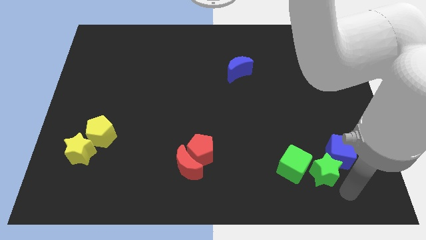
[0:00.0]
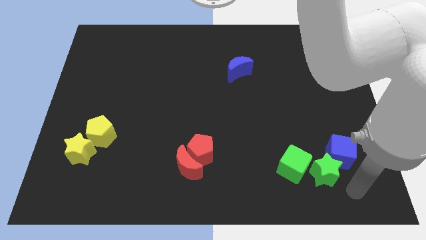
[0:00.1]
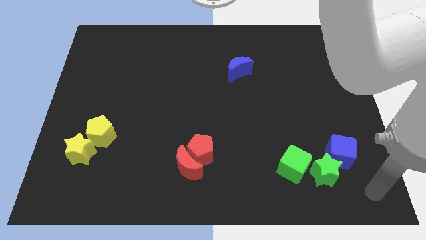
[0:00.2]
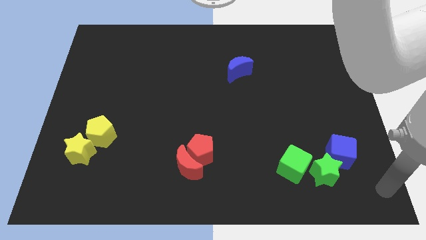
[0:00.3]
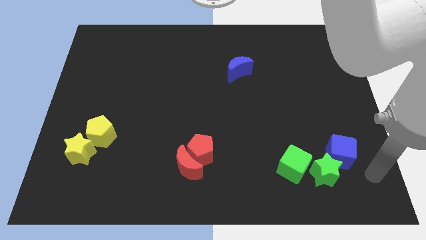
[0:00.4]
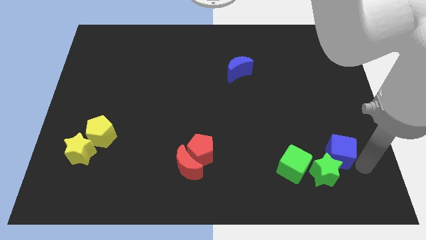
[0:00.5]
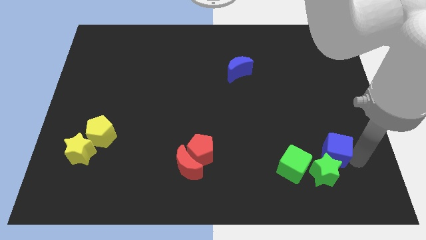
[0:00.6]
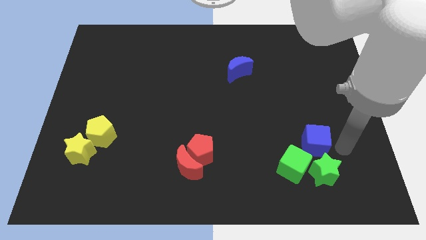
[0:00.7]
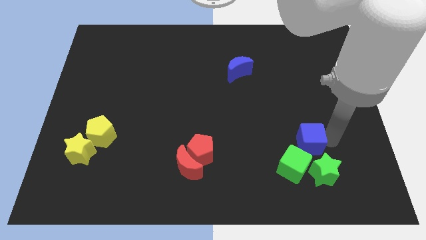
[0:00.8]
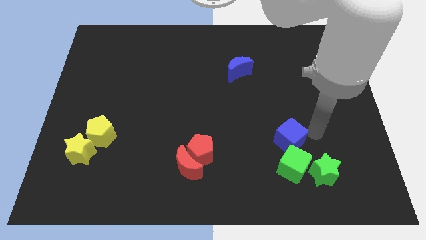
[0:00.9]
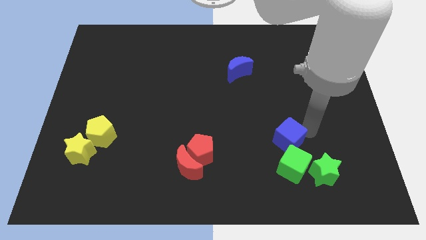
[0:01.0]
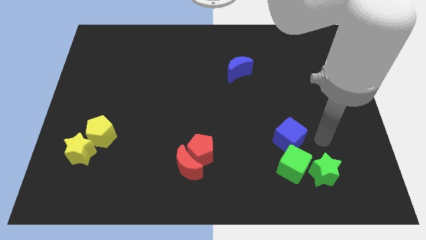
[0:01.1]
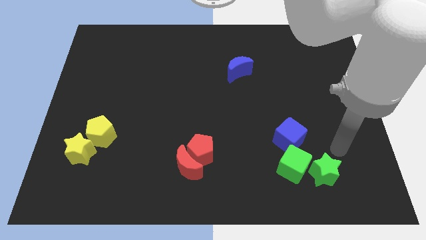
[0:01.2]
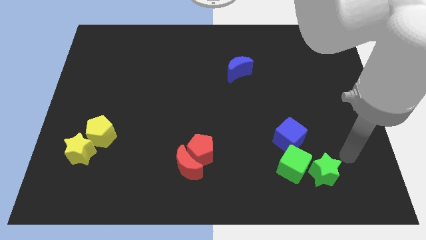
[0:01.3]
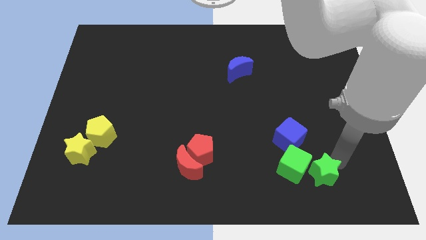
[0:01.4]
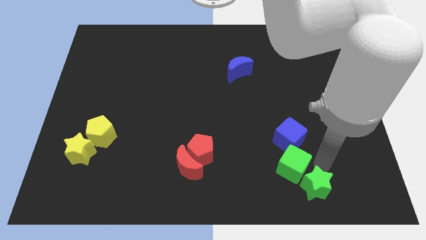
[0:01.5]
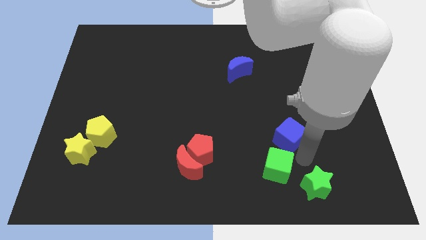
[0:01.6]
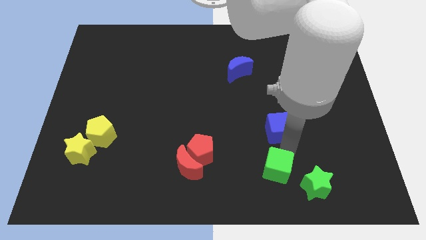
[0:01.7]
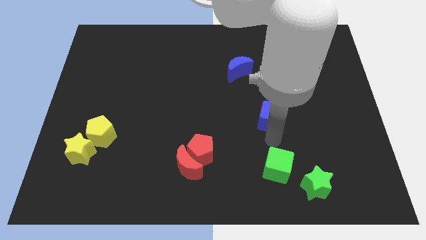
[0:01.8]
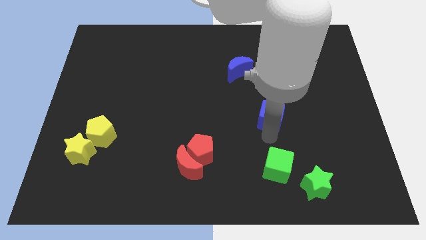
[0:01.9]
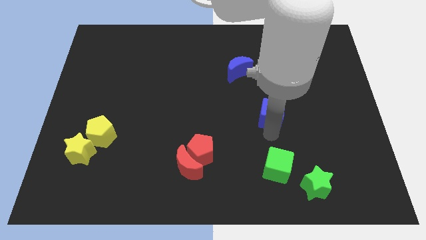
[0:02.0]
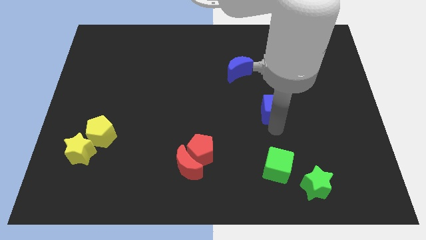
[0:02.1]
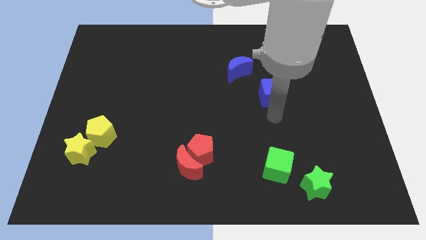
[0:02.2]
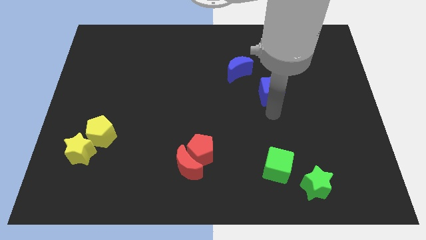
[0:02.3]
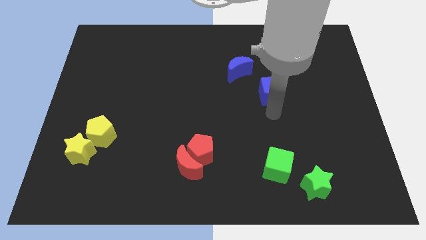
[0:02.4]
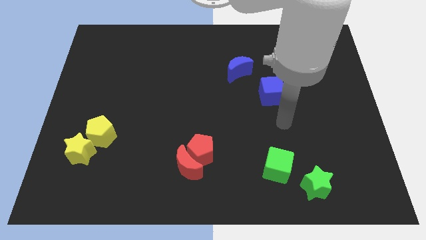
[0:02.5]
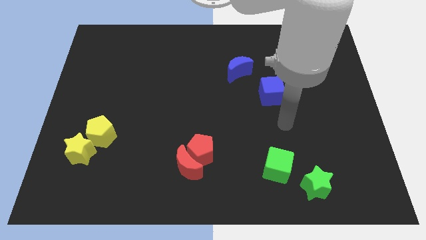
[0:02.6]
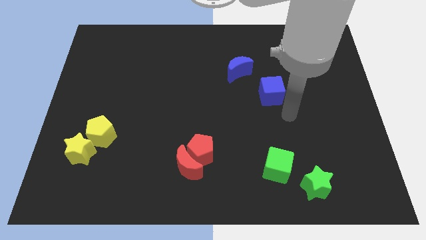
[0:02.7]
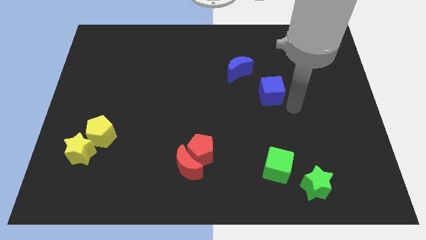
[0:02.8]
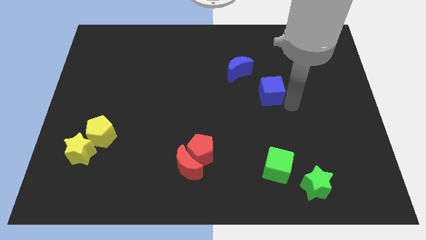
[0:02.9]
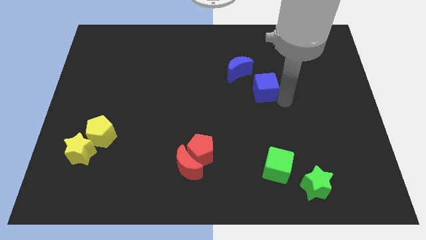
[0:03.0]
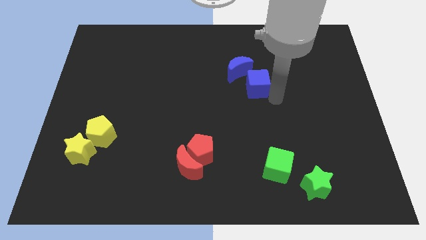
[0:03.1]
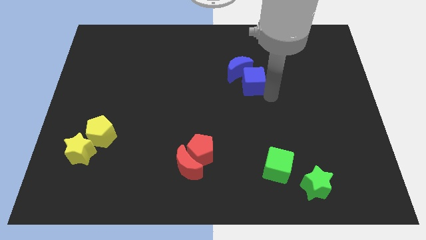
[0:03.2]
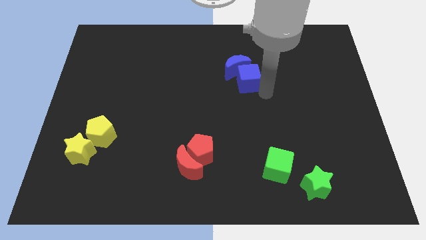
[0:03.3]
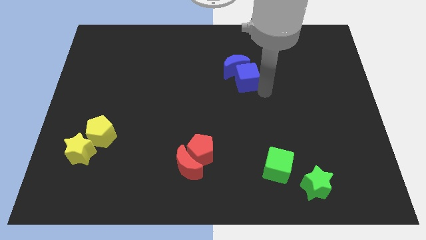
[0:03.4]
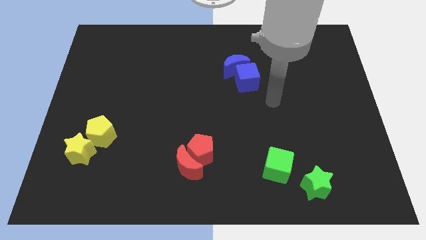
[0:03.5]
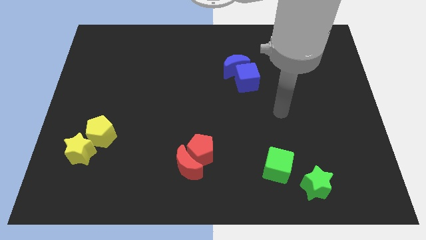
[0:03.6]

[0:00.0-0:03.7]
drag the blue cube to the bottom right side of the blue crescent

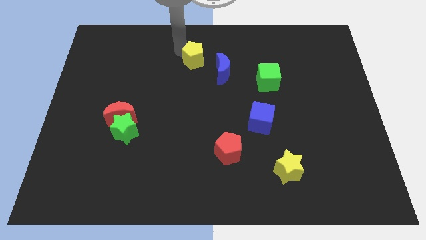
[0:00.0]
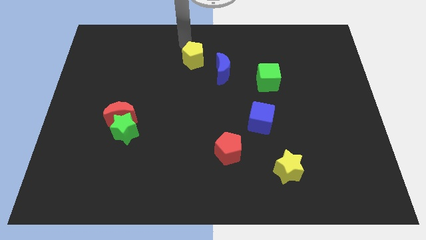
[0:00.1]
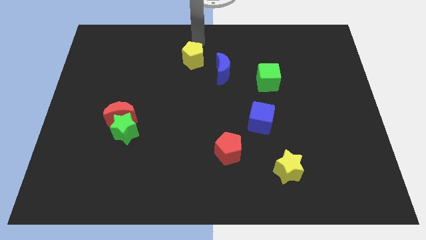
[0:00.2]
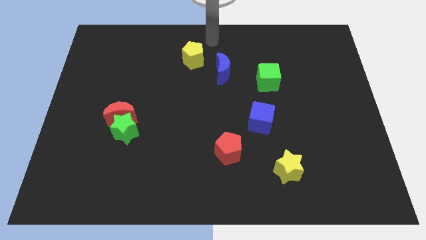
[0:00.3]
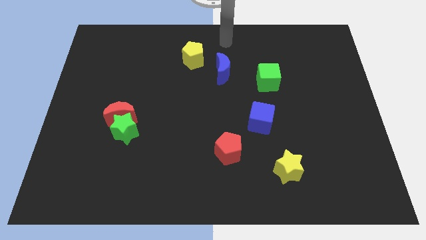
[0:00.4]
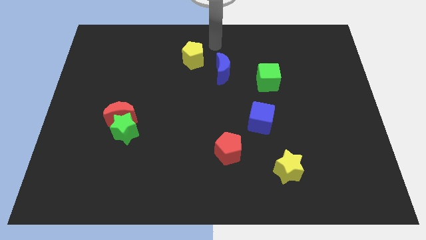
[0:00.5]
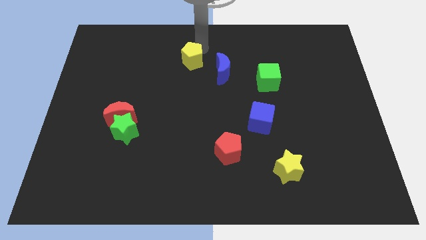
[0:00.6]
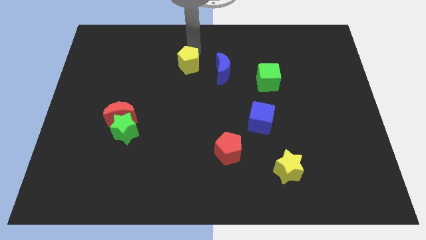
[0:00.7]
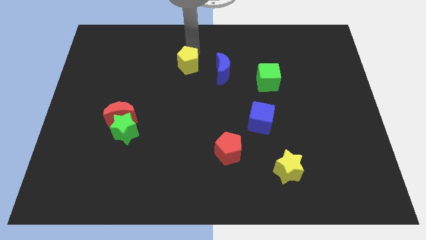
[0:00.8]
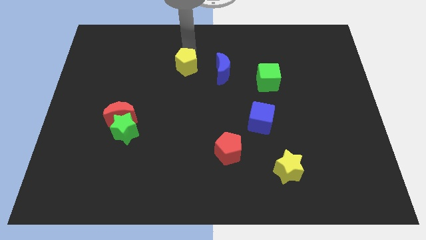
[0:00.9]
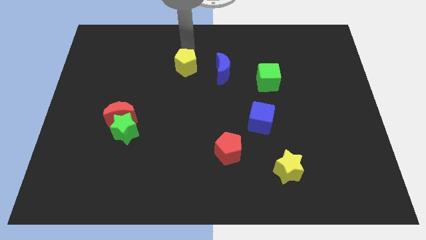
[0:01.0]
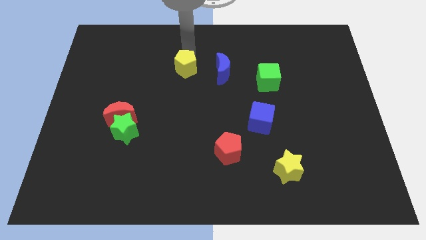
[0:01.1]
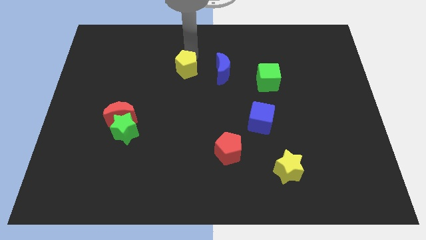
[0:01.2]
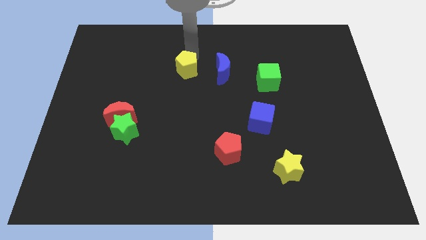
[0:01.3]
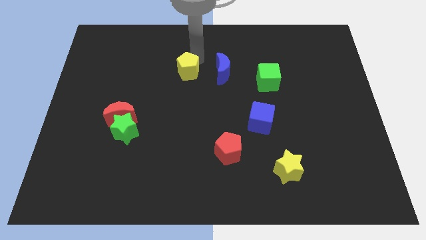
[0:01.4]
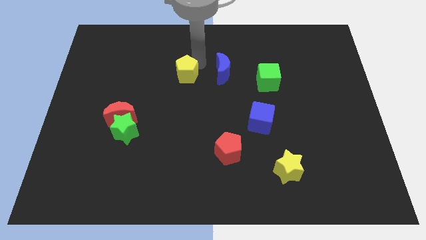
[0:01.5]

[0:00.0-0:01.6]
push the yellow penatgon left to the blue crescent

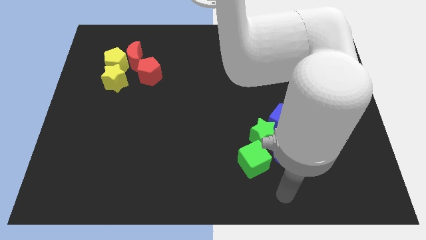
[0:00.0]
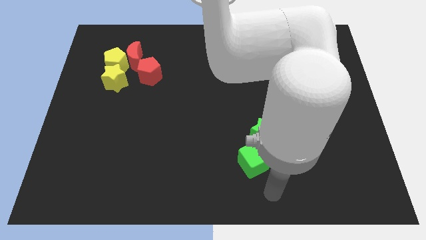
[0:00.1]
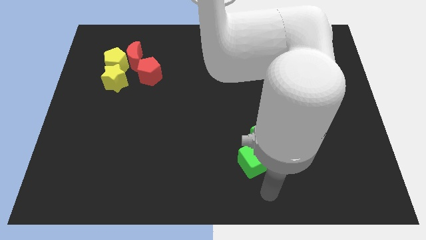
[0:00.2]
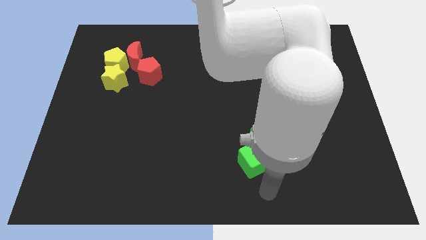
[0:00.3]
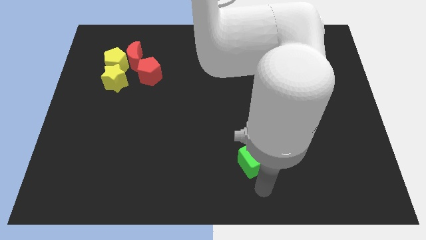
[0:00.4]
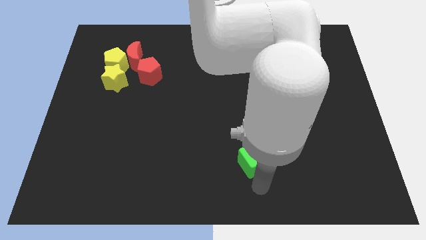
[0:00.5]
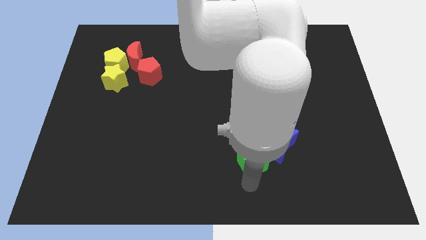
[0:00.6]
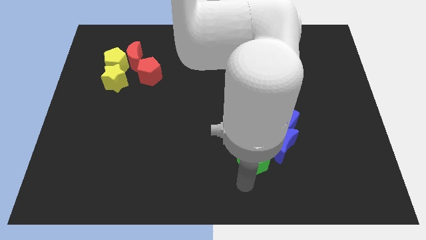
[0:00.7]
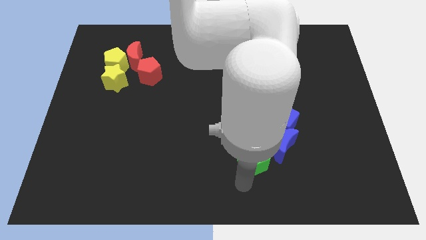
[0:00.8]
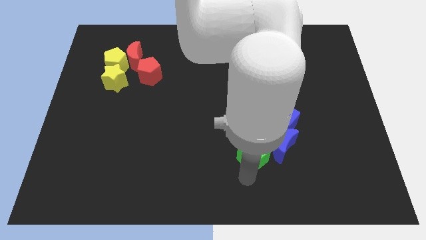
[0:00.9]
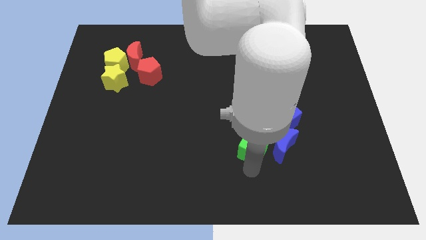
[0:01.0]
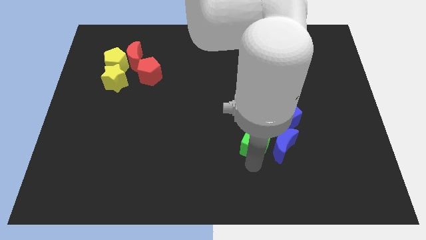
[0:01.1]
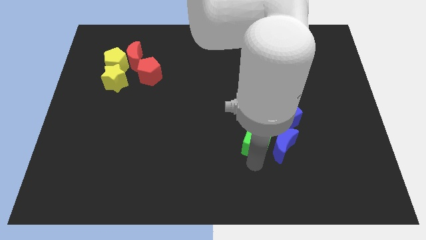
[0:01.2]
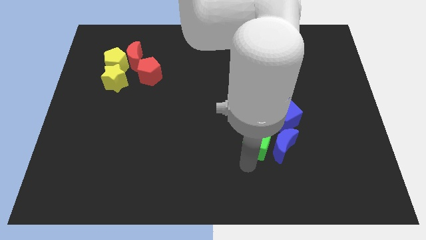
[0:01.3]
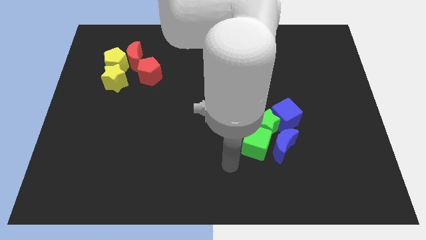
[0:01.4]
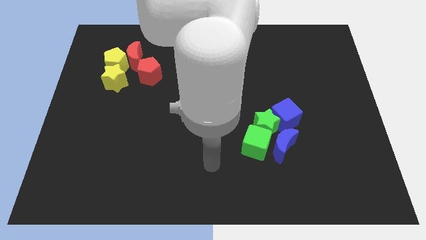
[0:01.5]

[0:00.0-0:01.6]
push green cube into green star

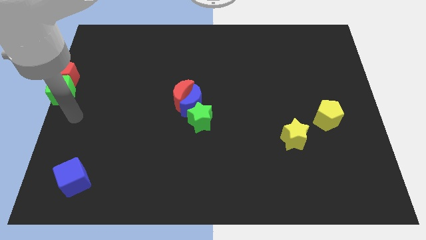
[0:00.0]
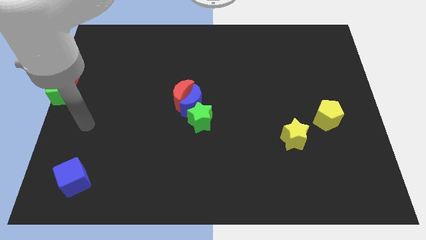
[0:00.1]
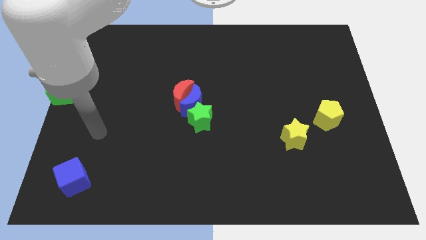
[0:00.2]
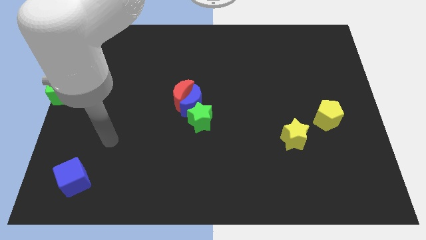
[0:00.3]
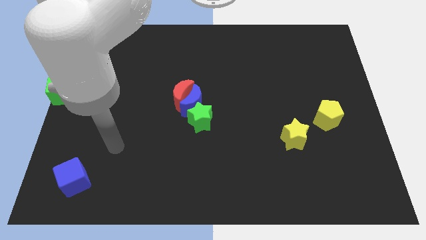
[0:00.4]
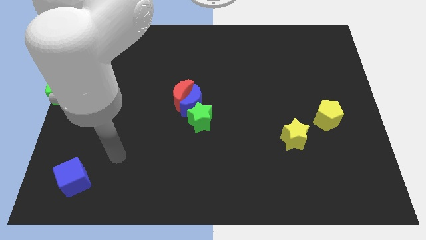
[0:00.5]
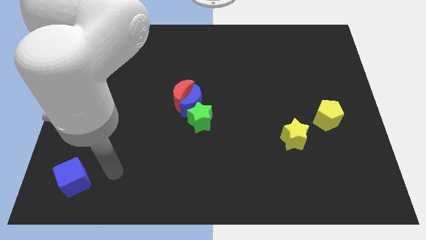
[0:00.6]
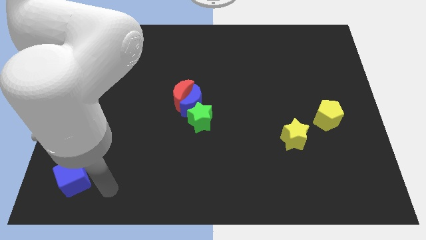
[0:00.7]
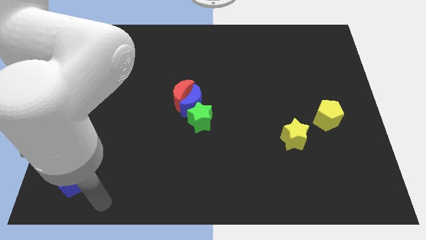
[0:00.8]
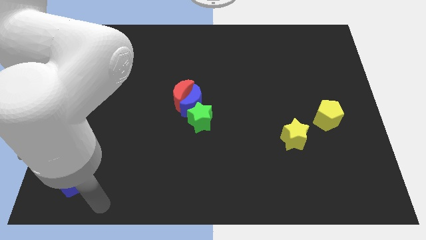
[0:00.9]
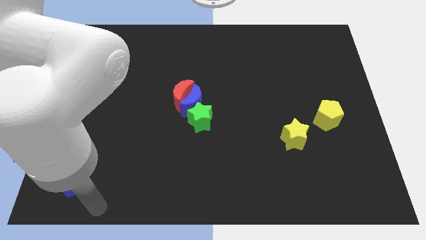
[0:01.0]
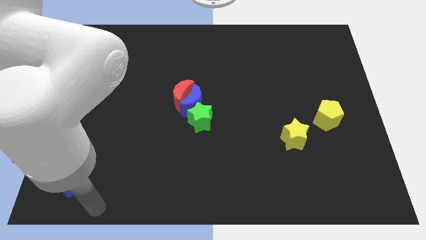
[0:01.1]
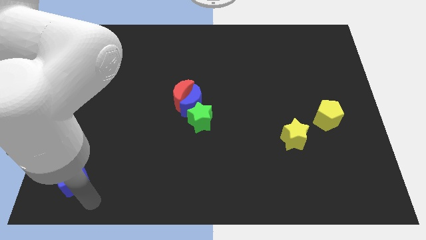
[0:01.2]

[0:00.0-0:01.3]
place your arm below blue cube

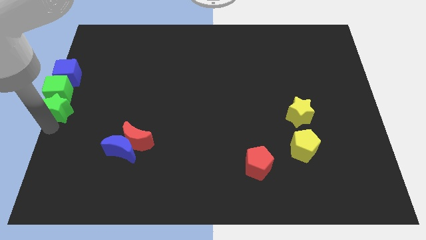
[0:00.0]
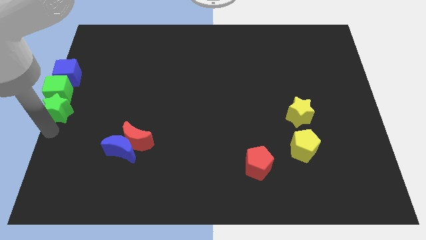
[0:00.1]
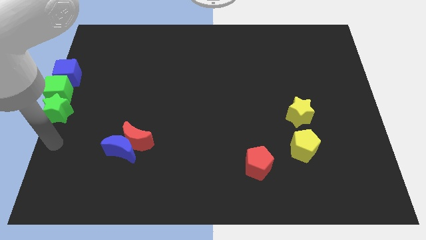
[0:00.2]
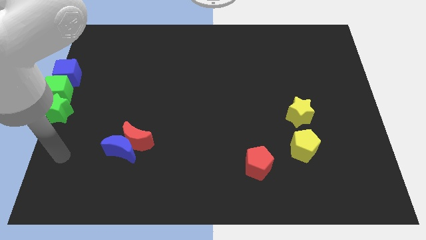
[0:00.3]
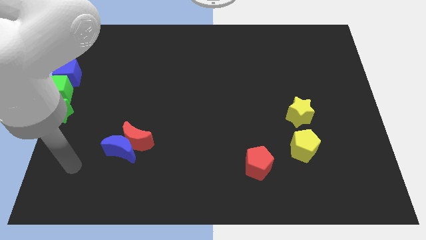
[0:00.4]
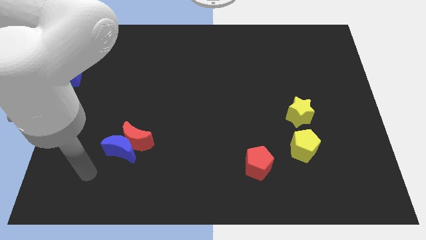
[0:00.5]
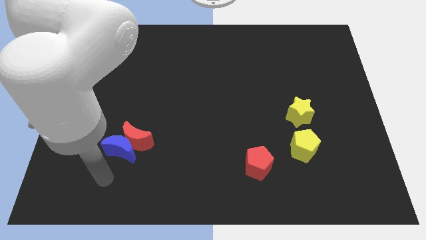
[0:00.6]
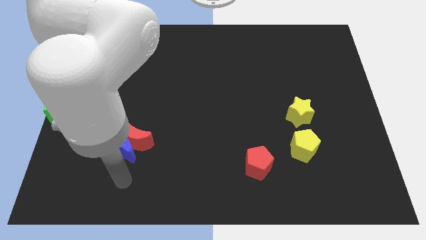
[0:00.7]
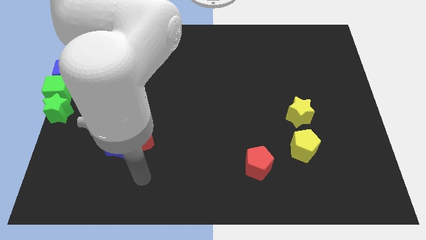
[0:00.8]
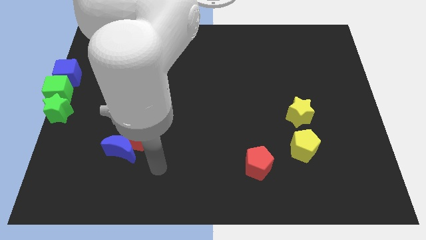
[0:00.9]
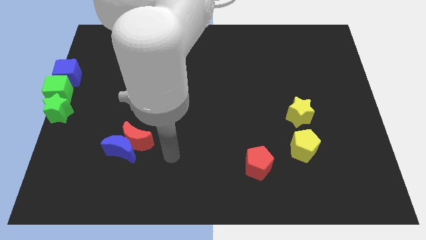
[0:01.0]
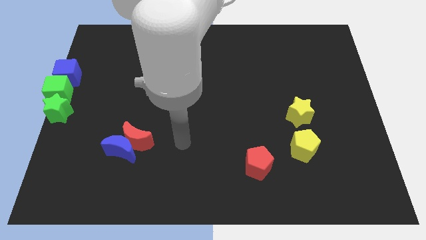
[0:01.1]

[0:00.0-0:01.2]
point your arm at the right of the blue crescent
